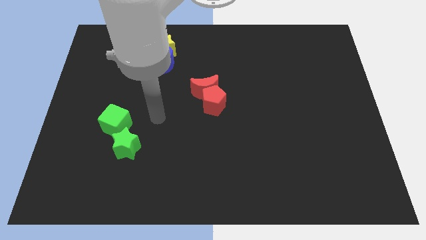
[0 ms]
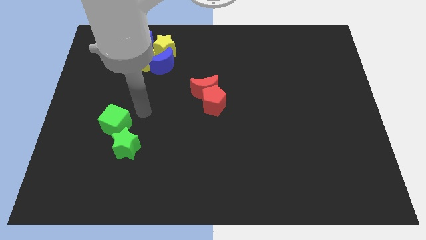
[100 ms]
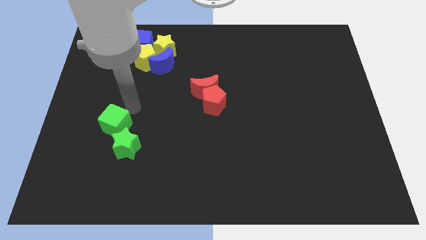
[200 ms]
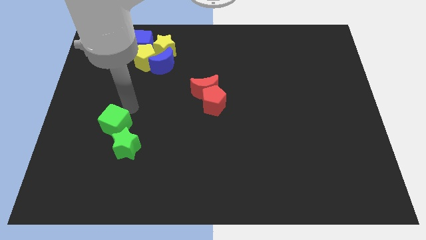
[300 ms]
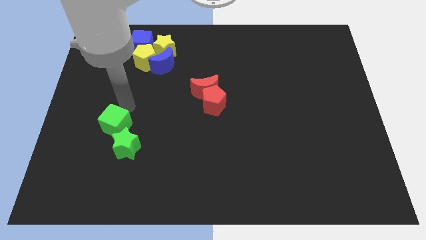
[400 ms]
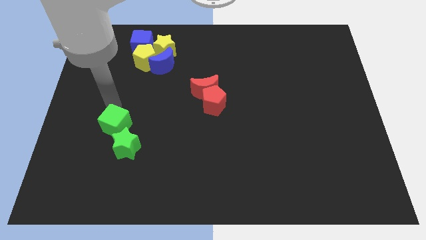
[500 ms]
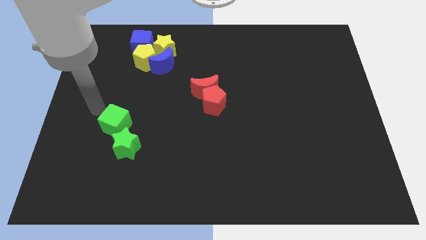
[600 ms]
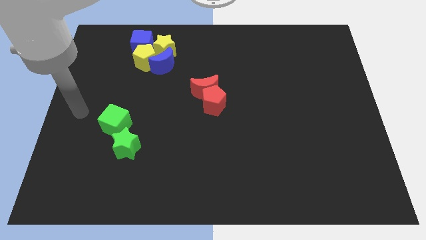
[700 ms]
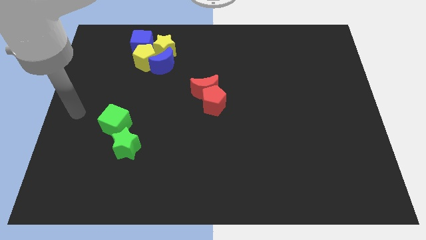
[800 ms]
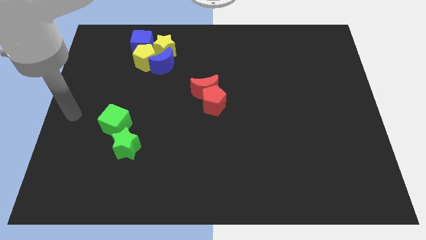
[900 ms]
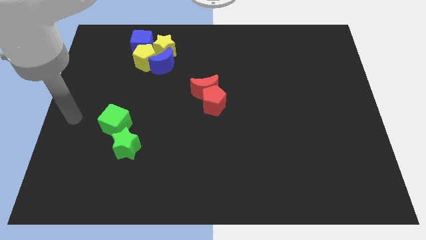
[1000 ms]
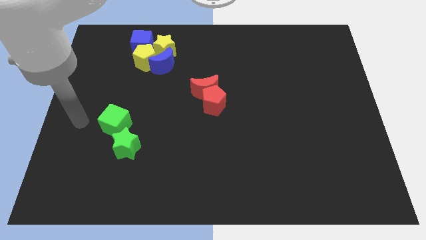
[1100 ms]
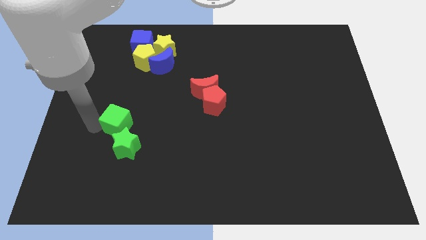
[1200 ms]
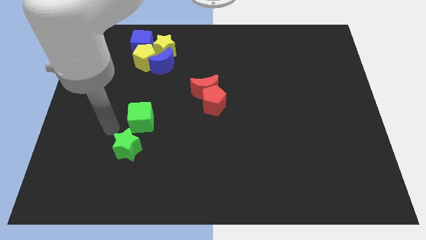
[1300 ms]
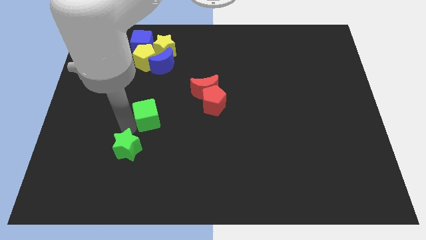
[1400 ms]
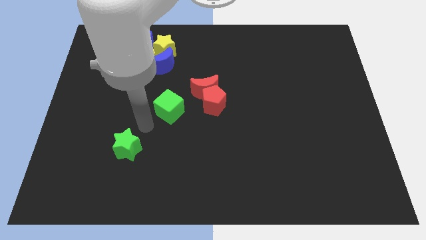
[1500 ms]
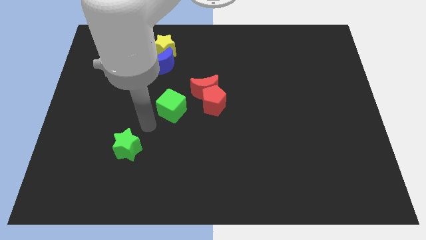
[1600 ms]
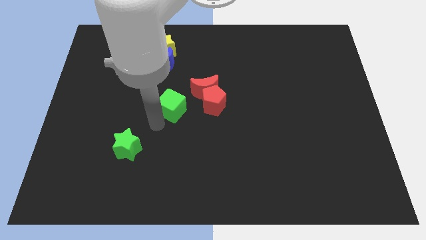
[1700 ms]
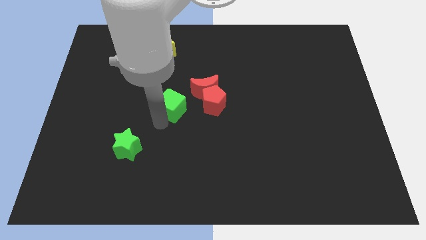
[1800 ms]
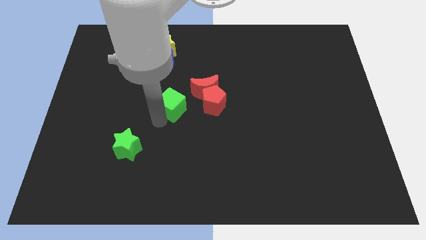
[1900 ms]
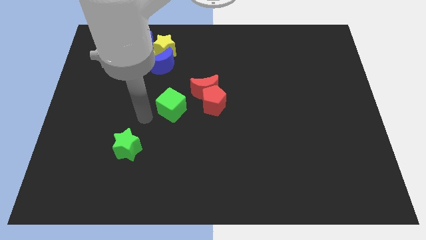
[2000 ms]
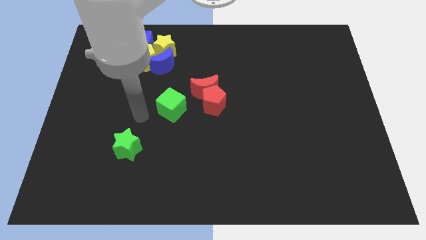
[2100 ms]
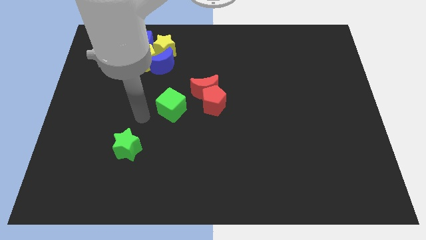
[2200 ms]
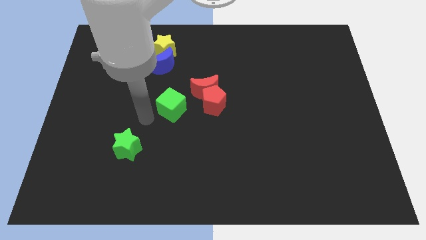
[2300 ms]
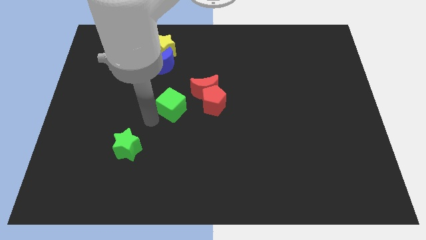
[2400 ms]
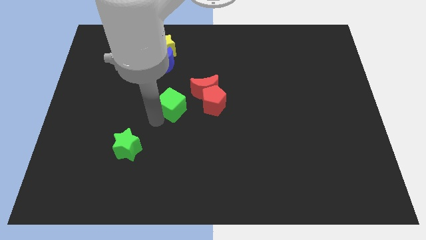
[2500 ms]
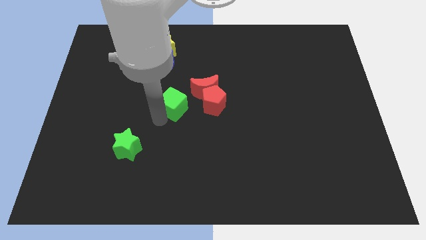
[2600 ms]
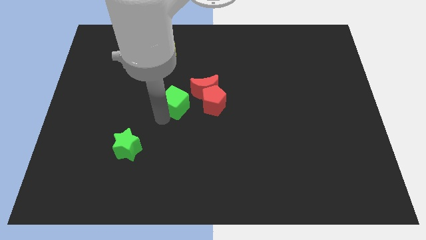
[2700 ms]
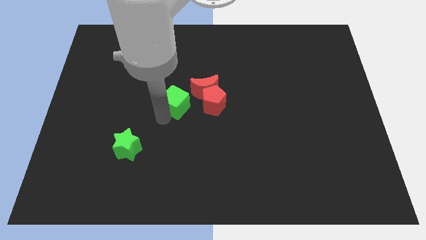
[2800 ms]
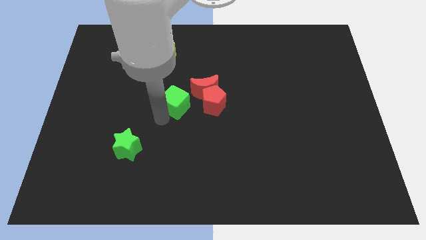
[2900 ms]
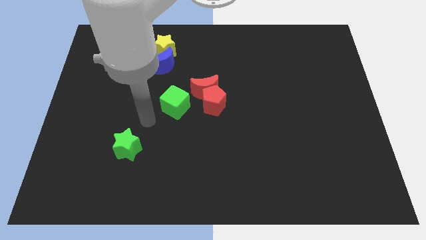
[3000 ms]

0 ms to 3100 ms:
separate the green cube from the green star

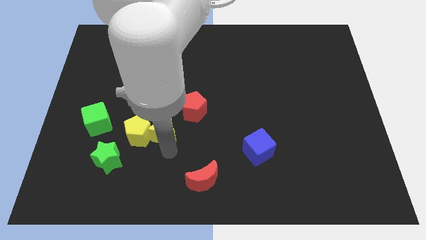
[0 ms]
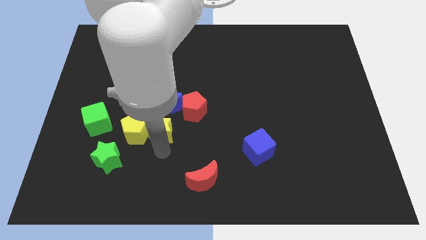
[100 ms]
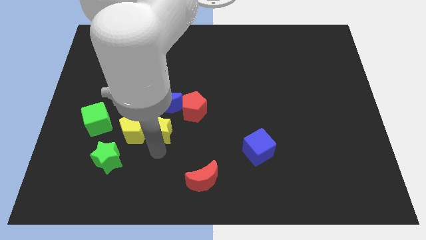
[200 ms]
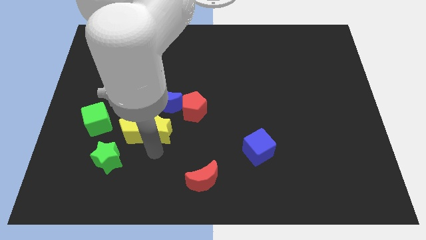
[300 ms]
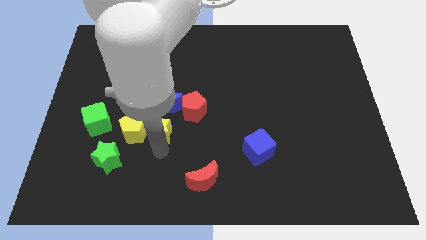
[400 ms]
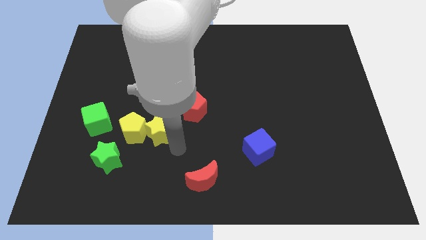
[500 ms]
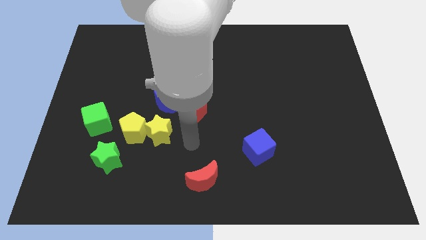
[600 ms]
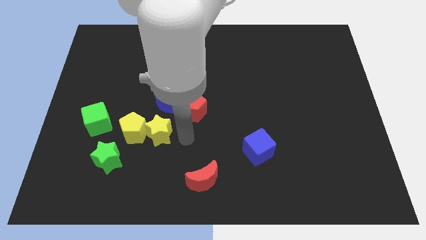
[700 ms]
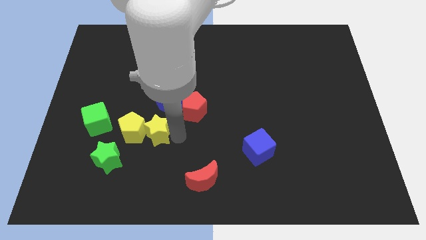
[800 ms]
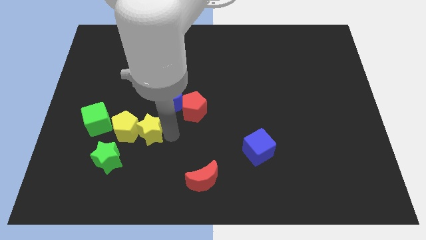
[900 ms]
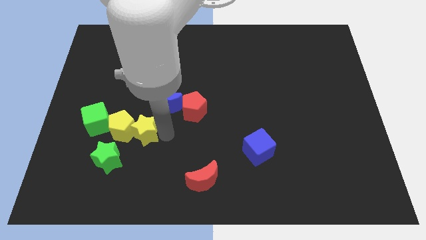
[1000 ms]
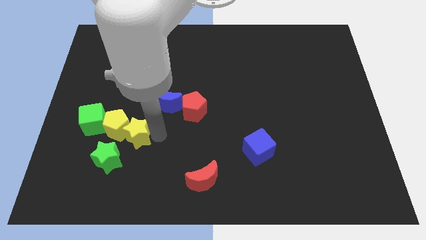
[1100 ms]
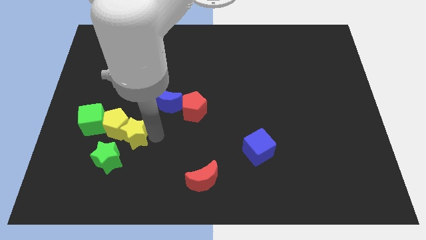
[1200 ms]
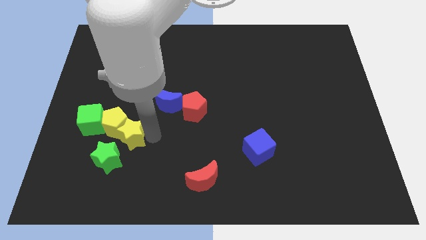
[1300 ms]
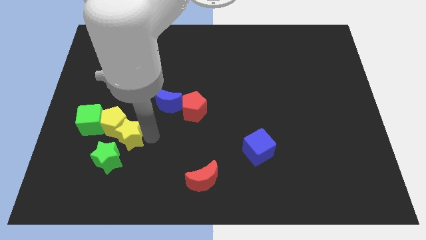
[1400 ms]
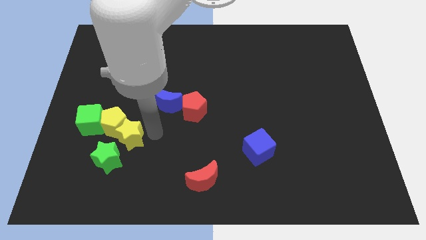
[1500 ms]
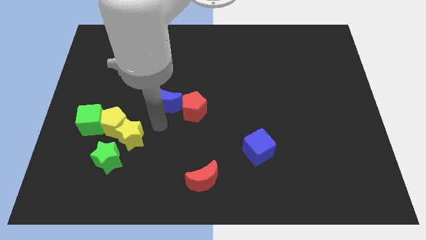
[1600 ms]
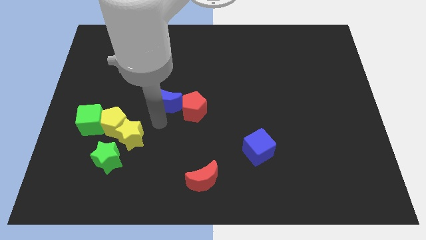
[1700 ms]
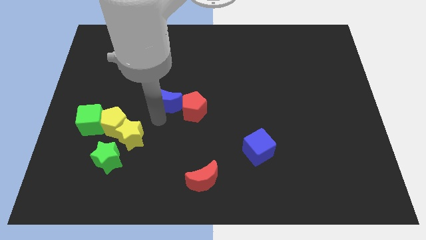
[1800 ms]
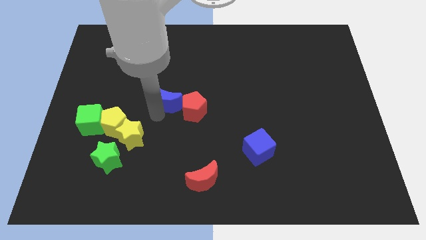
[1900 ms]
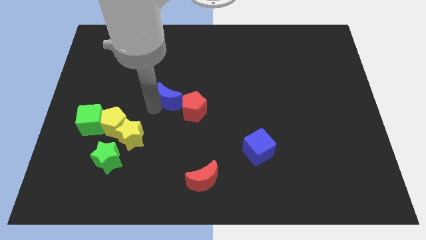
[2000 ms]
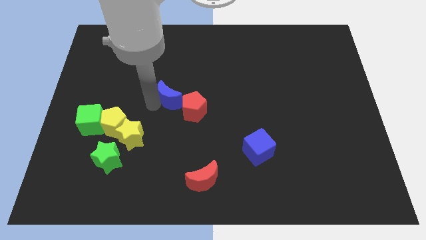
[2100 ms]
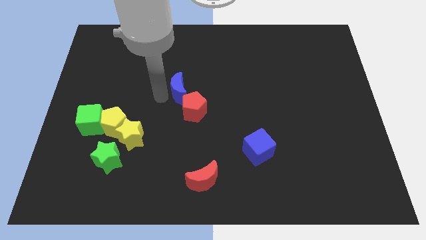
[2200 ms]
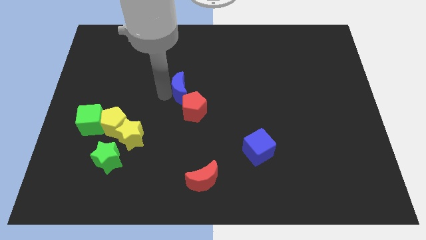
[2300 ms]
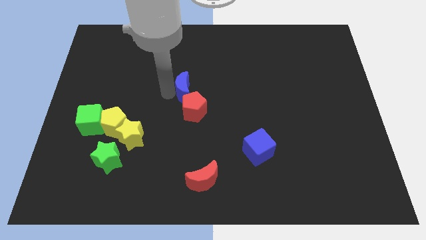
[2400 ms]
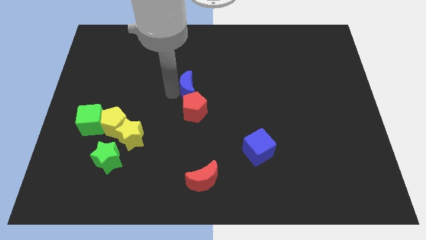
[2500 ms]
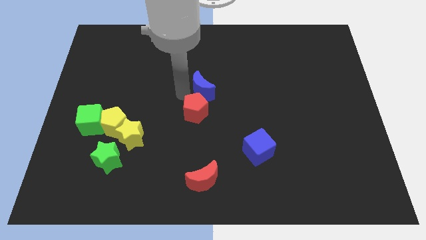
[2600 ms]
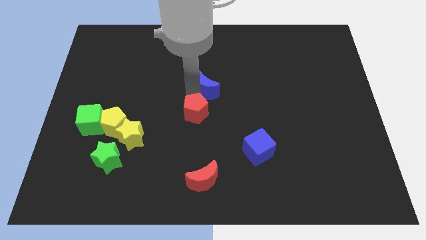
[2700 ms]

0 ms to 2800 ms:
put the yellow star and green cube together along with the yellow pentagon

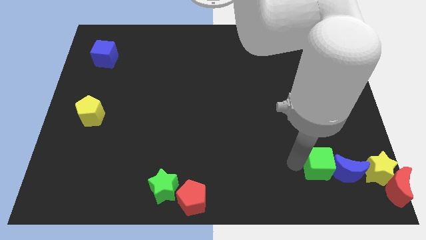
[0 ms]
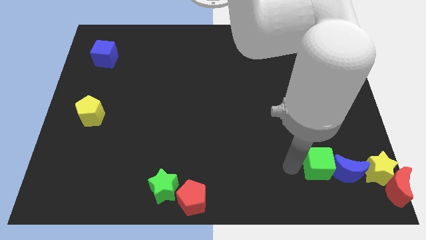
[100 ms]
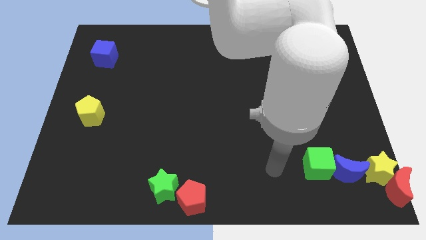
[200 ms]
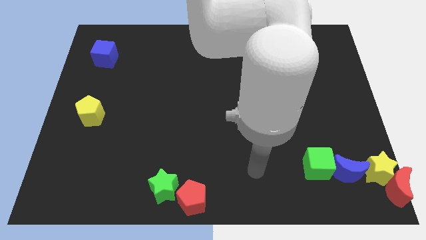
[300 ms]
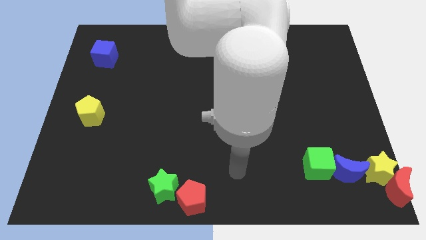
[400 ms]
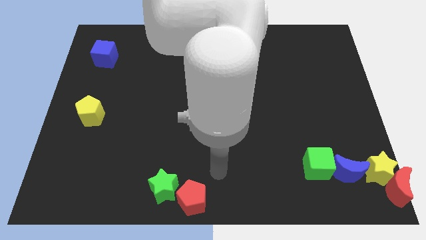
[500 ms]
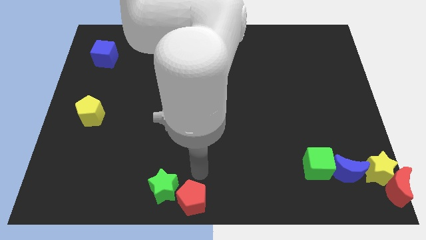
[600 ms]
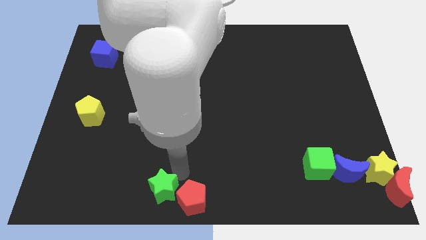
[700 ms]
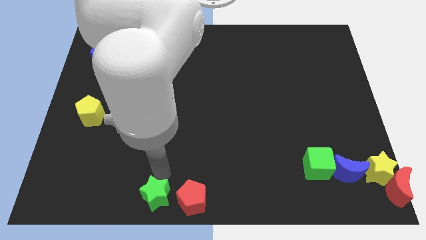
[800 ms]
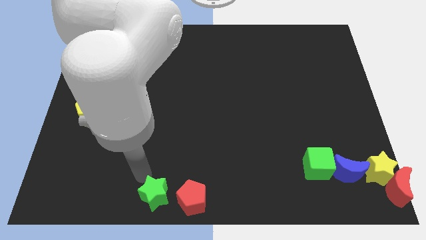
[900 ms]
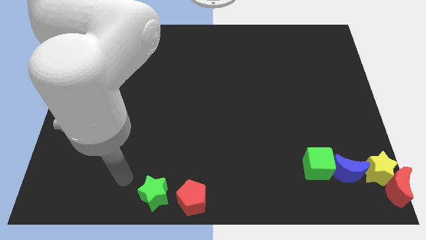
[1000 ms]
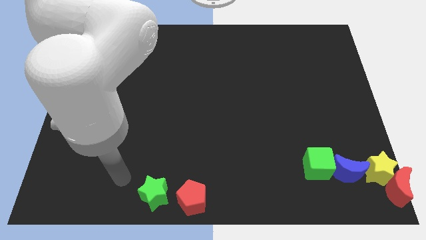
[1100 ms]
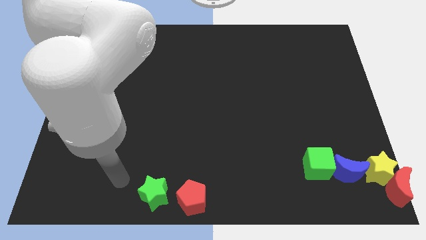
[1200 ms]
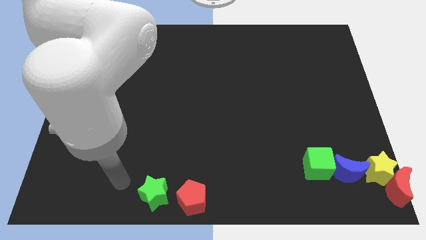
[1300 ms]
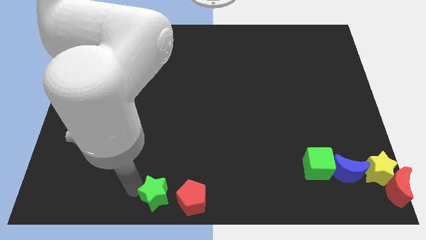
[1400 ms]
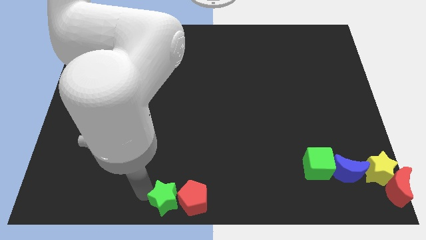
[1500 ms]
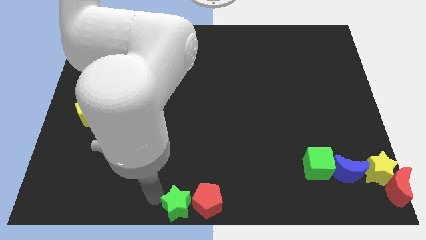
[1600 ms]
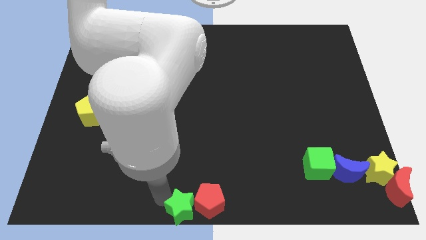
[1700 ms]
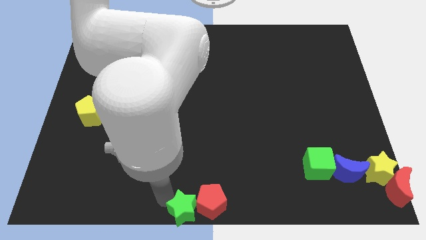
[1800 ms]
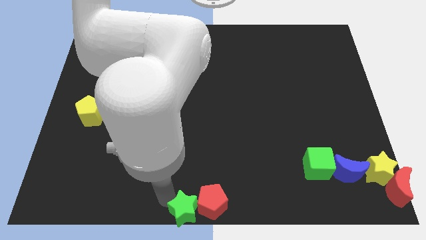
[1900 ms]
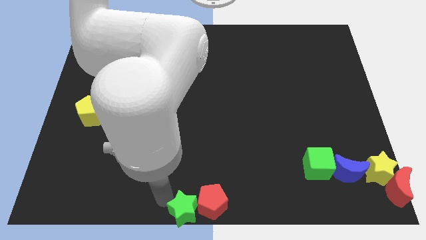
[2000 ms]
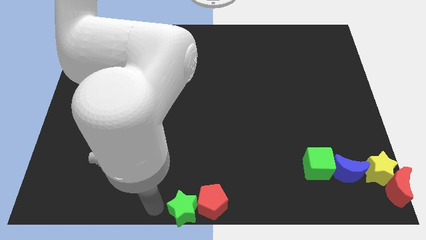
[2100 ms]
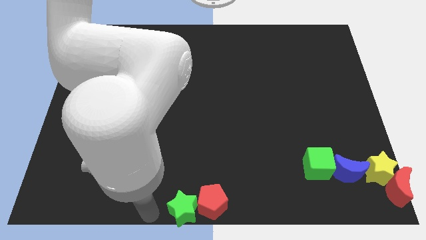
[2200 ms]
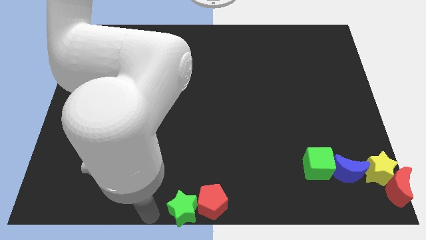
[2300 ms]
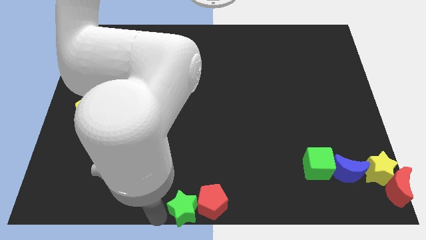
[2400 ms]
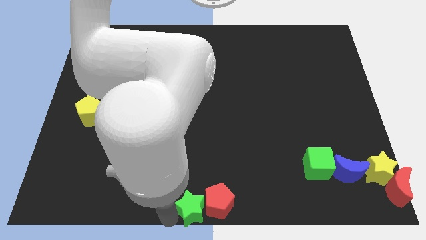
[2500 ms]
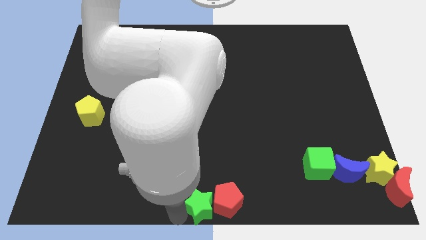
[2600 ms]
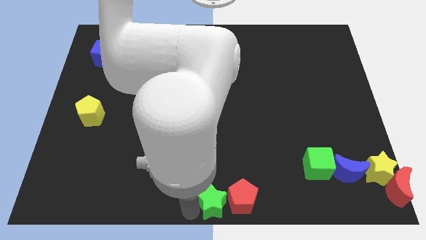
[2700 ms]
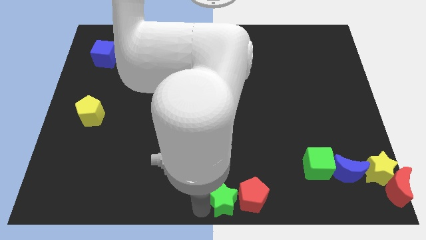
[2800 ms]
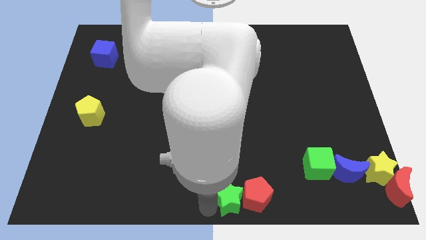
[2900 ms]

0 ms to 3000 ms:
place green star to the bottom center of board
